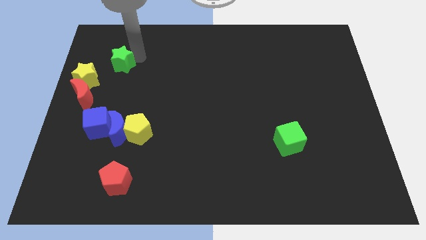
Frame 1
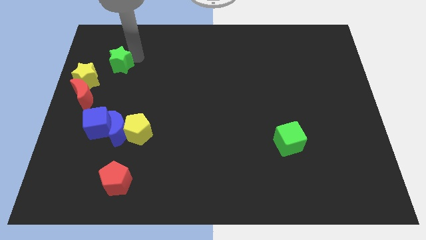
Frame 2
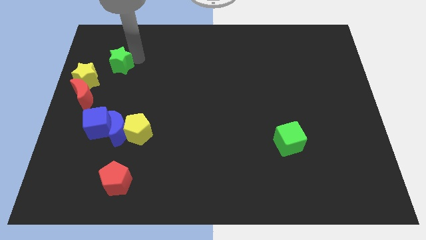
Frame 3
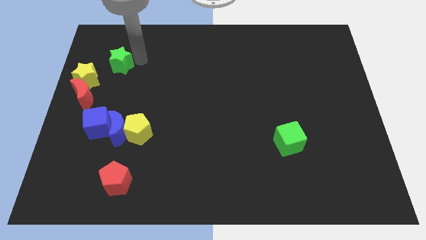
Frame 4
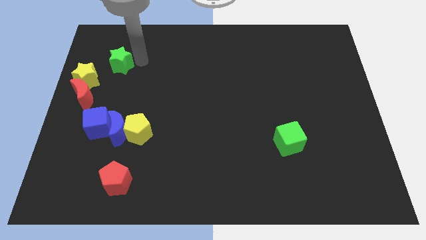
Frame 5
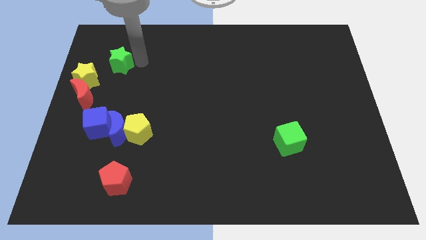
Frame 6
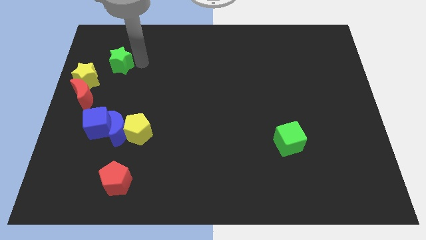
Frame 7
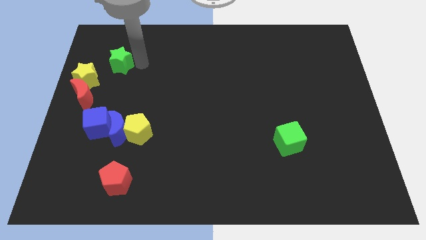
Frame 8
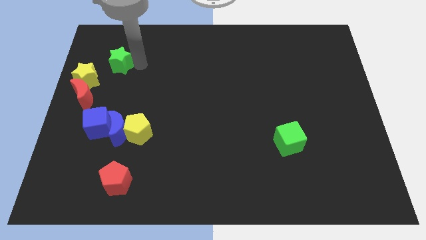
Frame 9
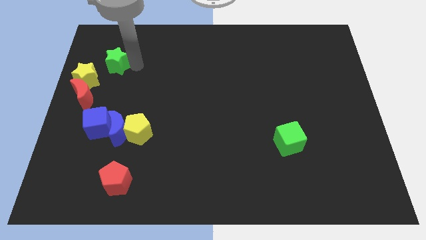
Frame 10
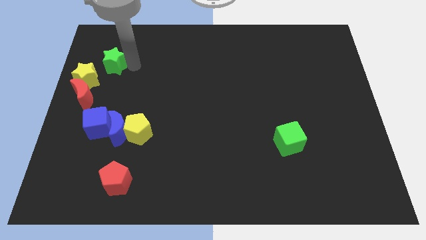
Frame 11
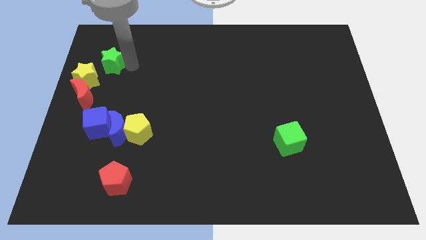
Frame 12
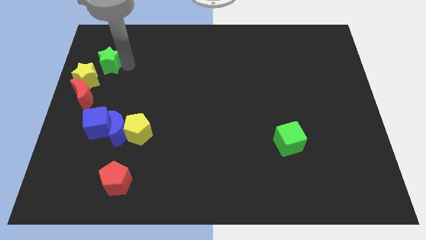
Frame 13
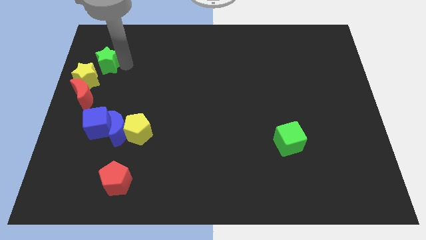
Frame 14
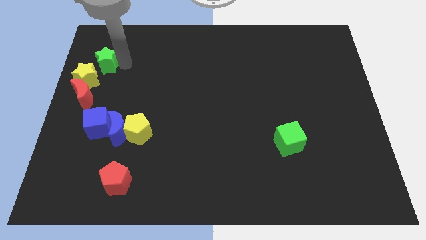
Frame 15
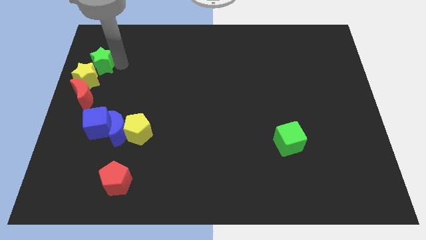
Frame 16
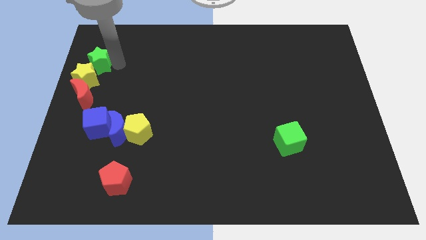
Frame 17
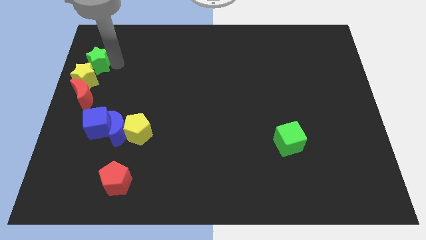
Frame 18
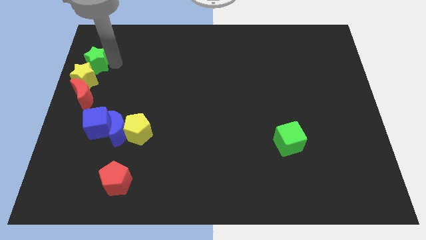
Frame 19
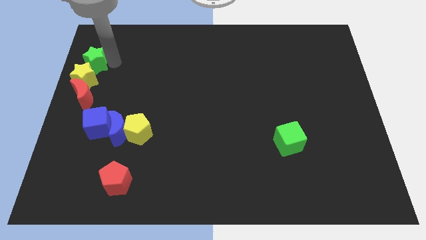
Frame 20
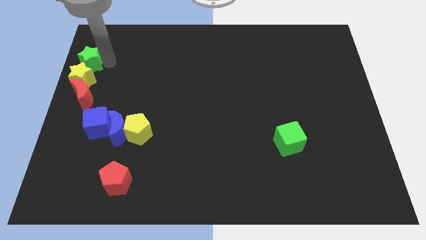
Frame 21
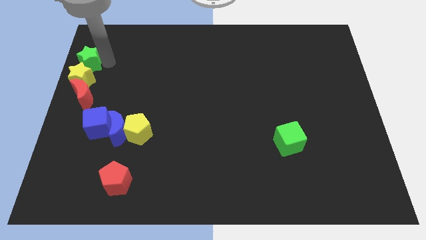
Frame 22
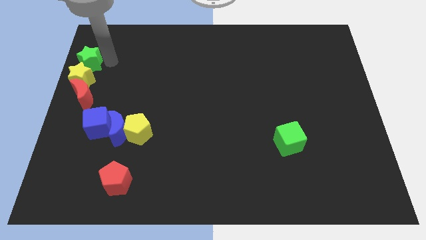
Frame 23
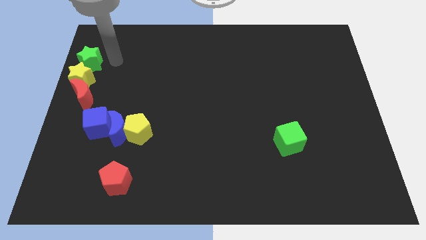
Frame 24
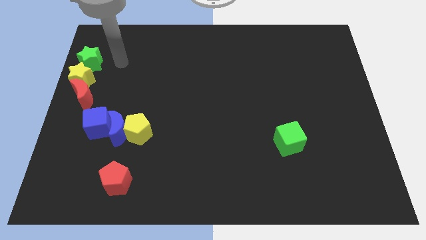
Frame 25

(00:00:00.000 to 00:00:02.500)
slide green star above yellow star

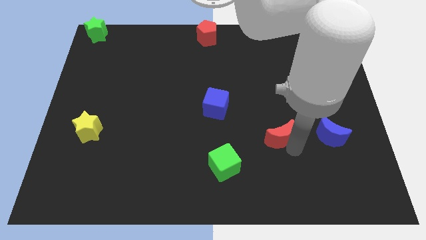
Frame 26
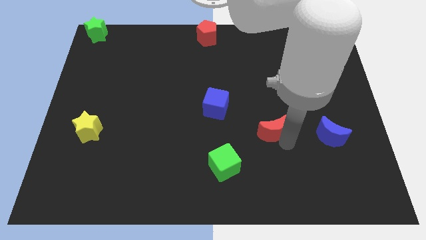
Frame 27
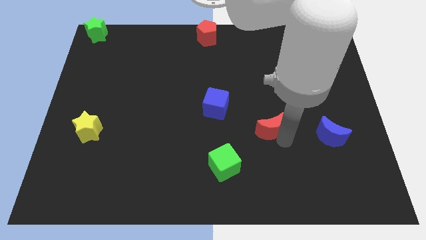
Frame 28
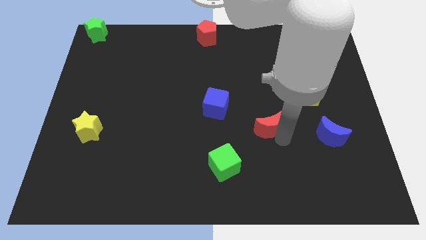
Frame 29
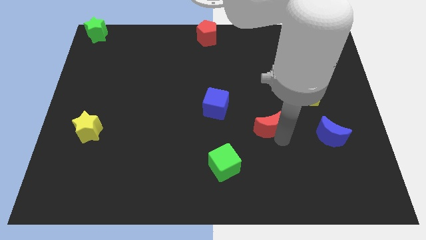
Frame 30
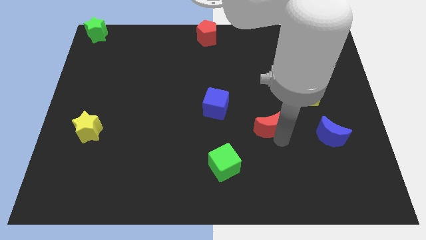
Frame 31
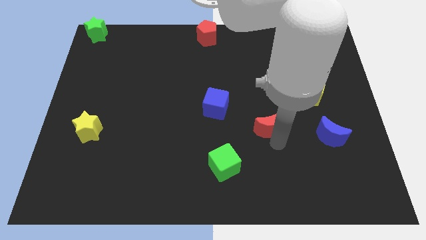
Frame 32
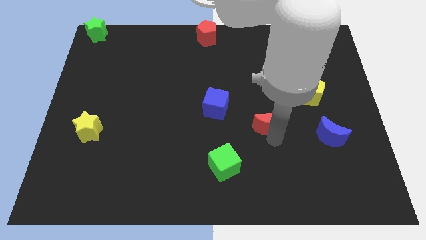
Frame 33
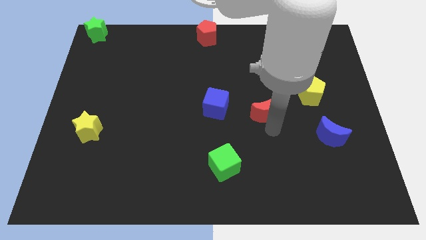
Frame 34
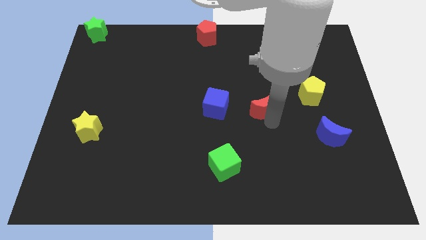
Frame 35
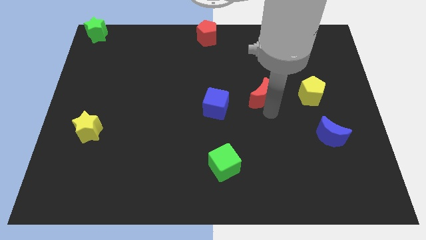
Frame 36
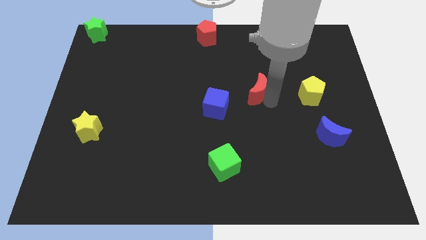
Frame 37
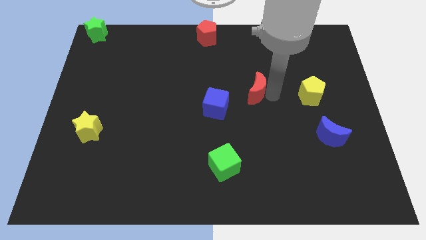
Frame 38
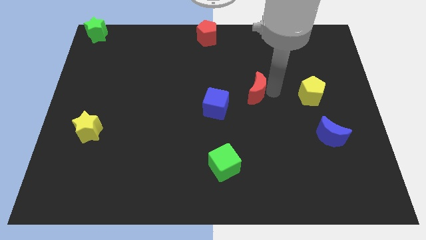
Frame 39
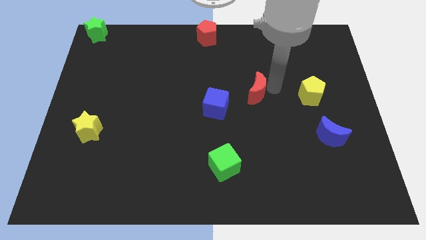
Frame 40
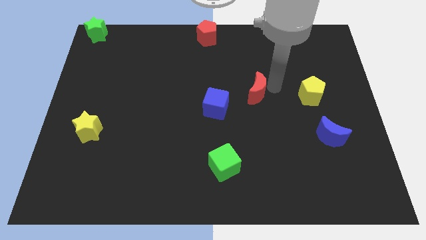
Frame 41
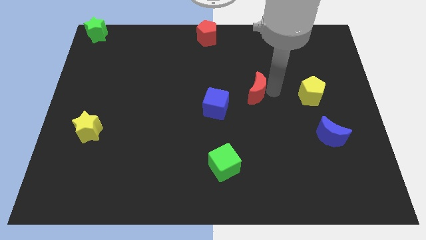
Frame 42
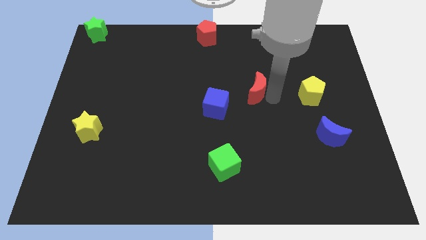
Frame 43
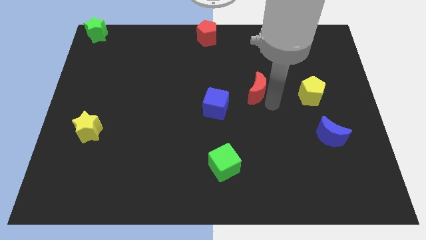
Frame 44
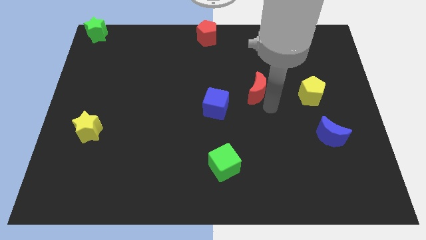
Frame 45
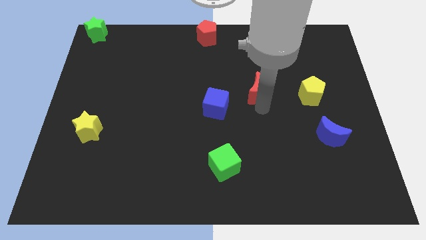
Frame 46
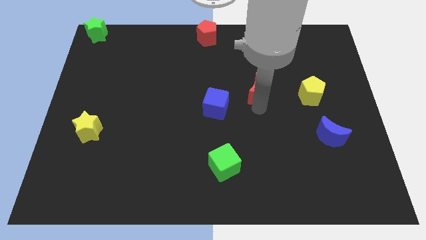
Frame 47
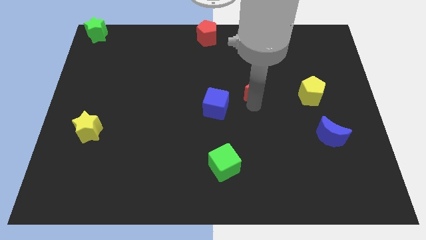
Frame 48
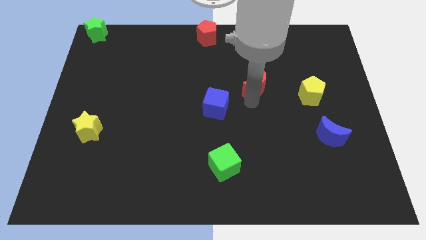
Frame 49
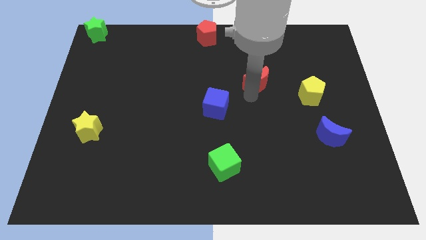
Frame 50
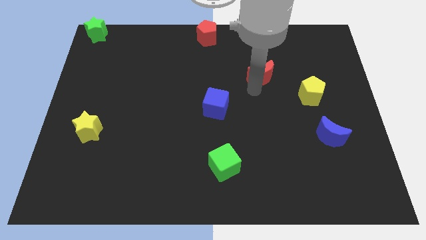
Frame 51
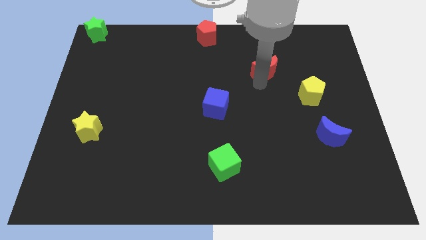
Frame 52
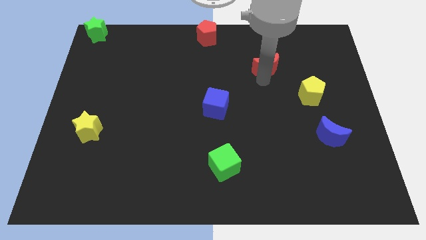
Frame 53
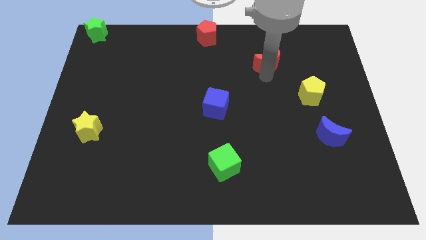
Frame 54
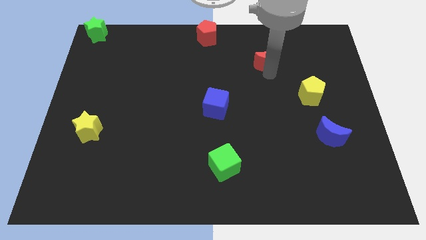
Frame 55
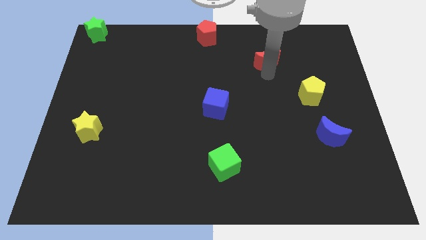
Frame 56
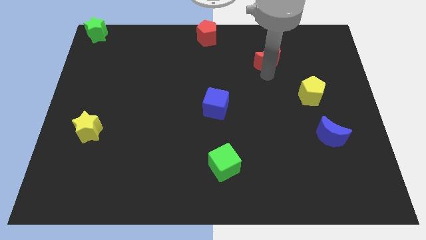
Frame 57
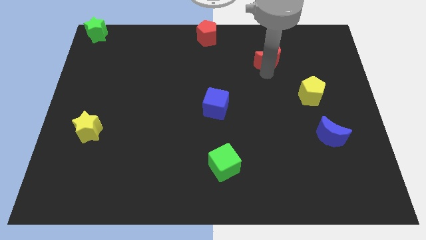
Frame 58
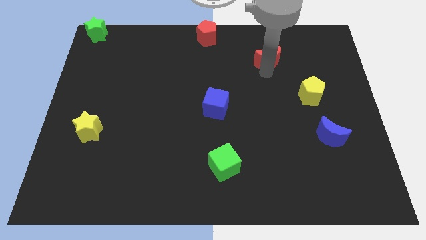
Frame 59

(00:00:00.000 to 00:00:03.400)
move red moon towards the top

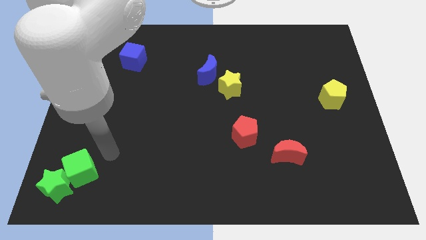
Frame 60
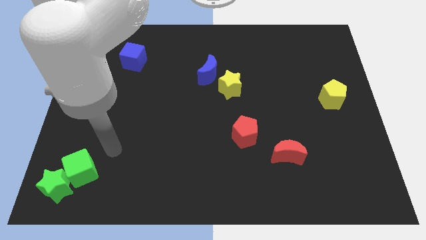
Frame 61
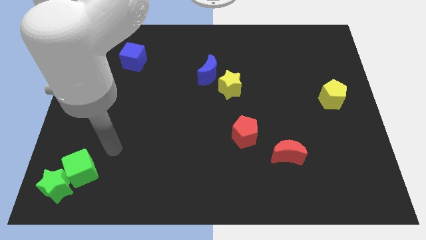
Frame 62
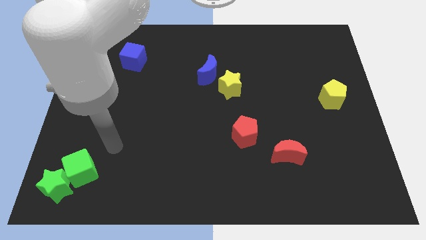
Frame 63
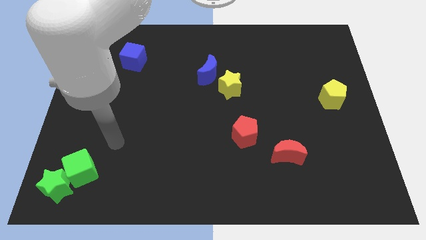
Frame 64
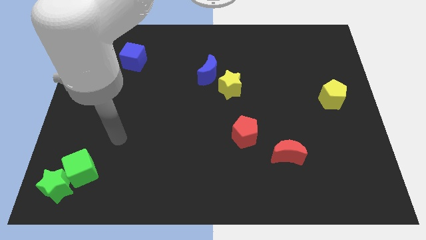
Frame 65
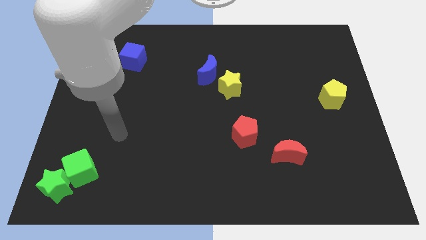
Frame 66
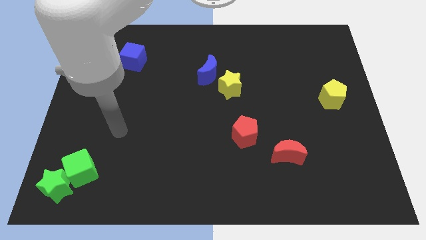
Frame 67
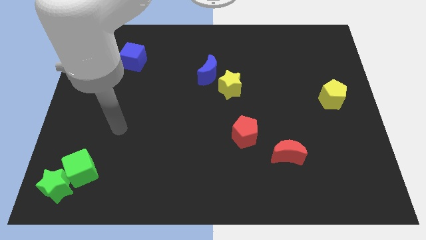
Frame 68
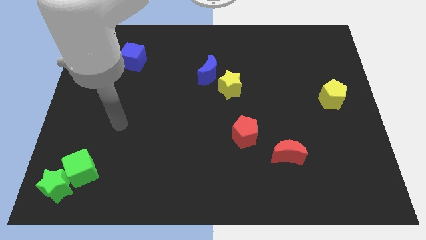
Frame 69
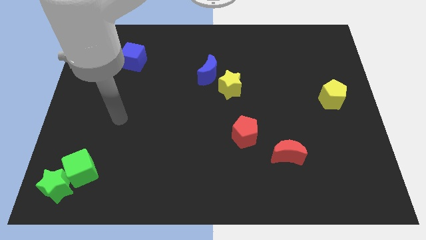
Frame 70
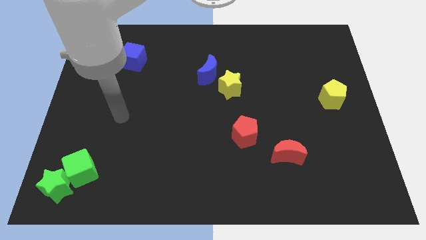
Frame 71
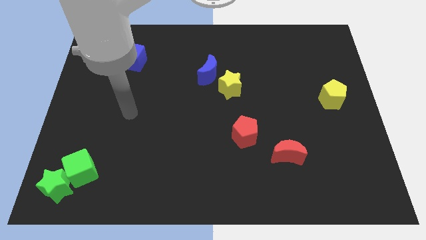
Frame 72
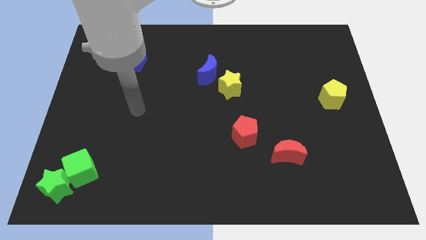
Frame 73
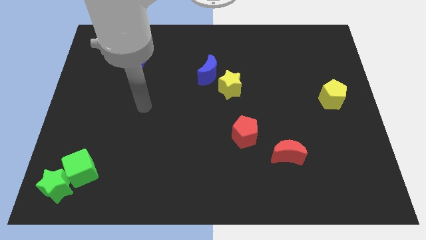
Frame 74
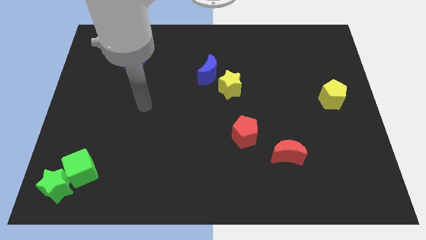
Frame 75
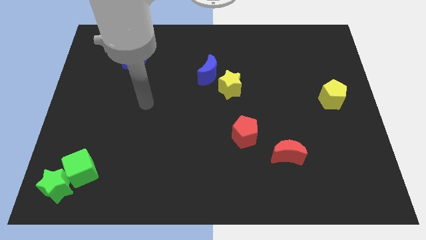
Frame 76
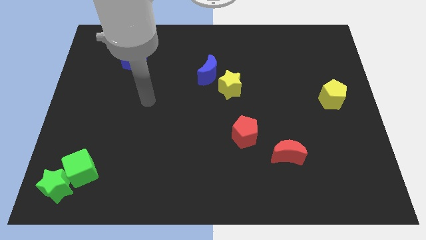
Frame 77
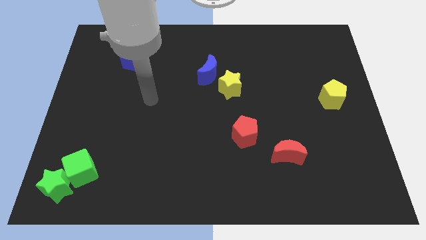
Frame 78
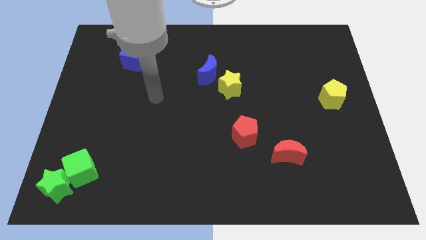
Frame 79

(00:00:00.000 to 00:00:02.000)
move your hand away from the green cube

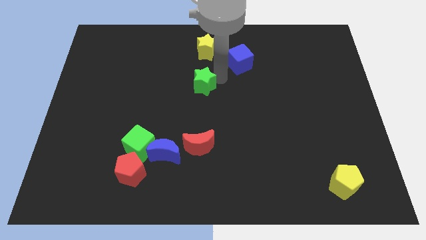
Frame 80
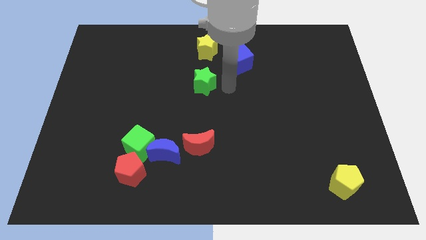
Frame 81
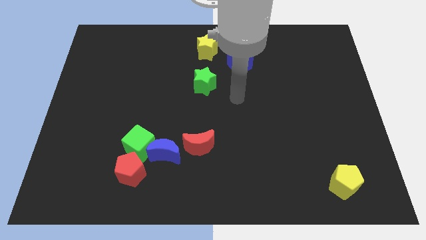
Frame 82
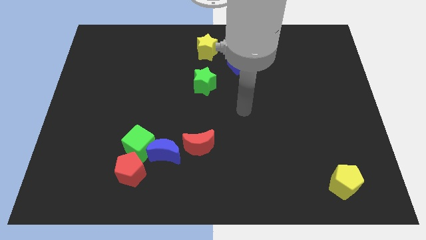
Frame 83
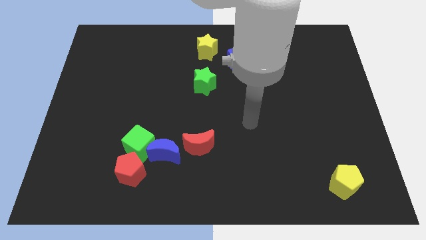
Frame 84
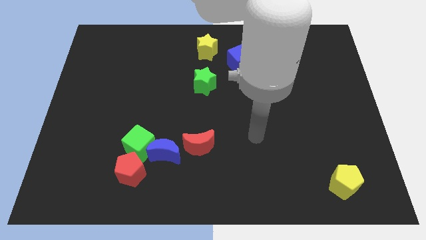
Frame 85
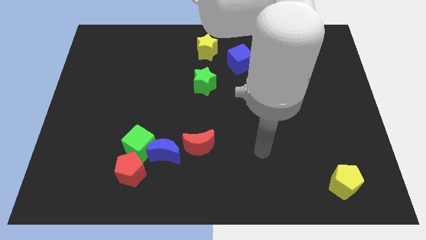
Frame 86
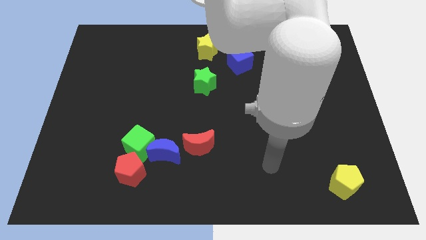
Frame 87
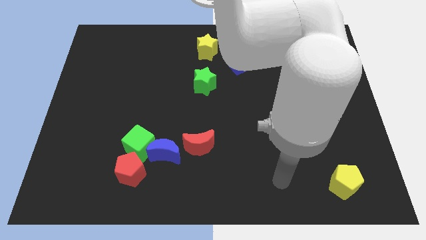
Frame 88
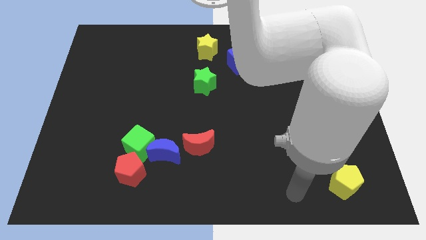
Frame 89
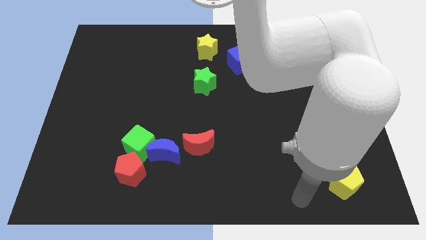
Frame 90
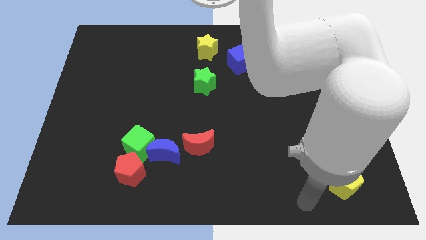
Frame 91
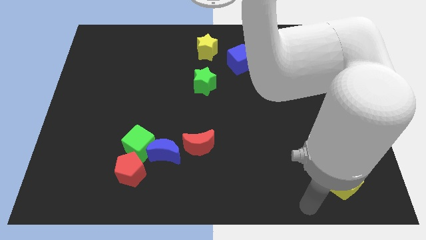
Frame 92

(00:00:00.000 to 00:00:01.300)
point your arm to the bottom left of the yellow pentagon

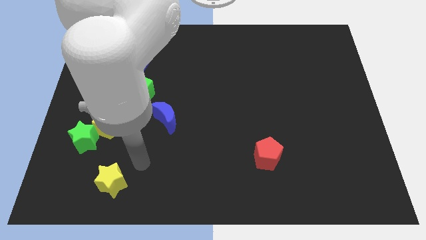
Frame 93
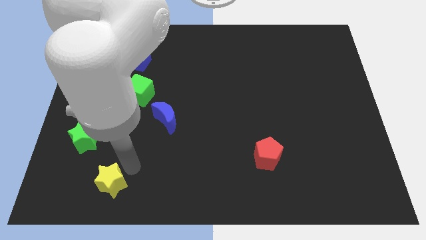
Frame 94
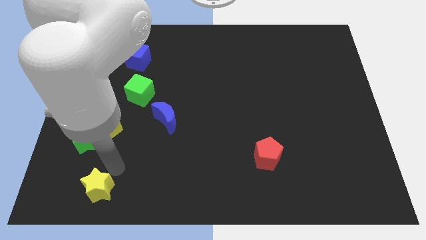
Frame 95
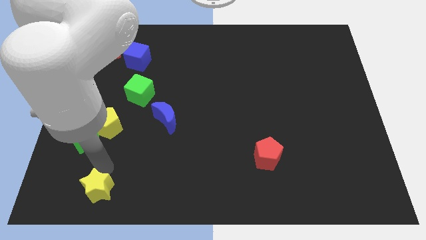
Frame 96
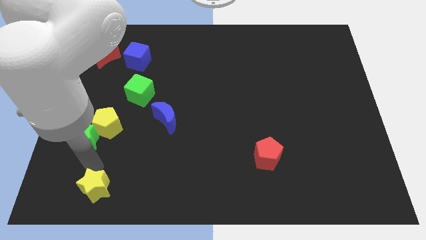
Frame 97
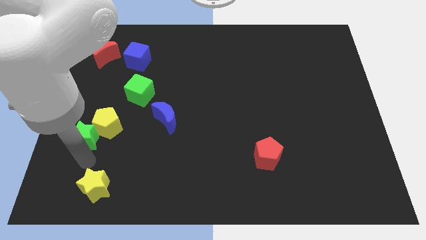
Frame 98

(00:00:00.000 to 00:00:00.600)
slightly push the yellow star
